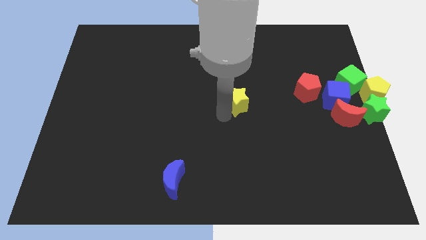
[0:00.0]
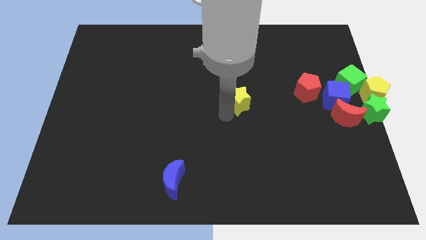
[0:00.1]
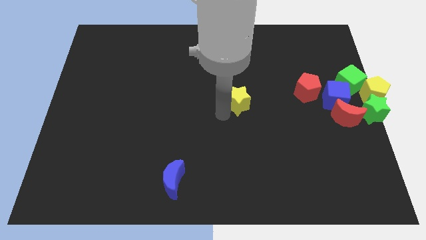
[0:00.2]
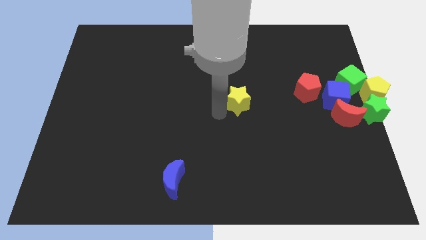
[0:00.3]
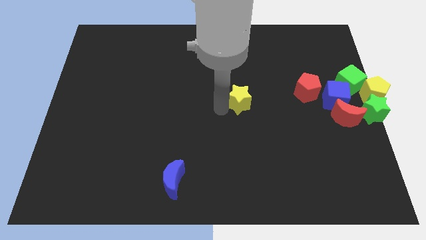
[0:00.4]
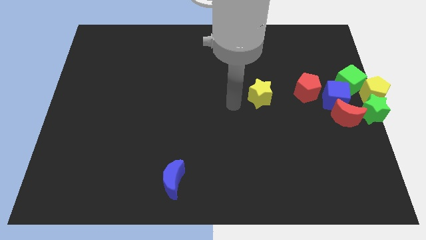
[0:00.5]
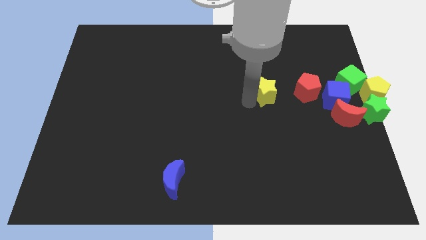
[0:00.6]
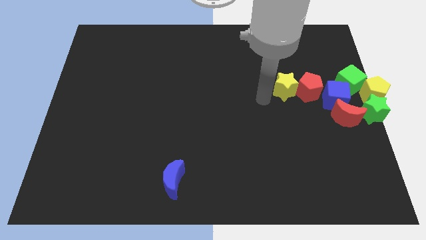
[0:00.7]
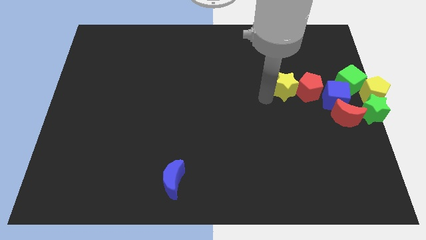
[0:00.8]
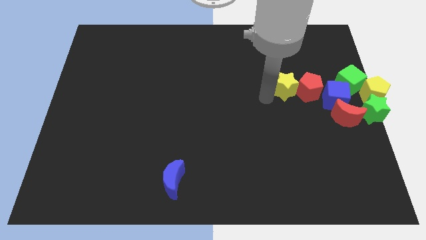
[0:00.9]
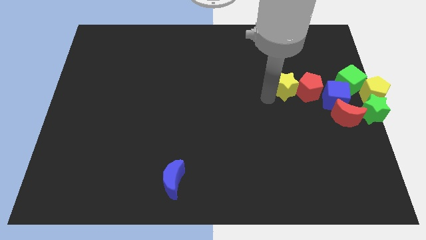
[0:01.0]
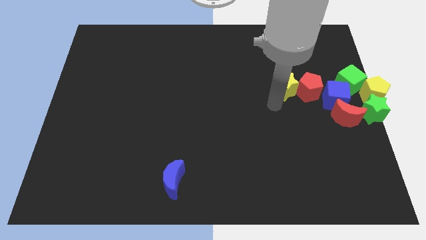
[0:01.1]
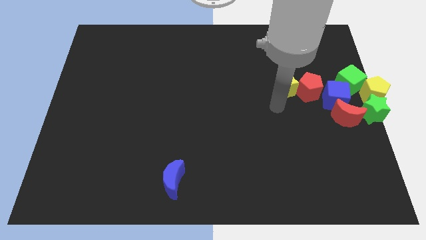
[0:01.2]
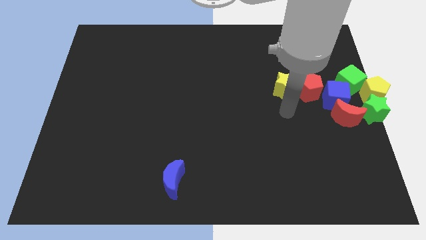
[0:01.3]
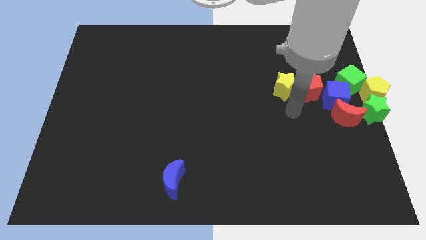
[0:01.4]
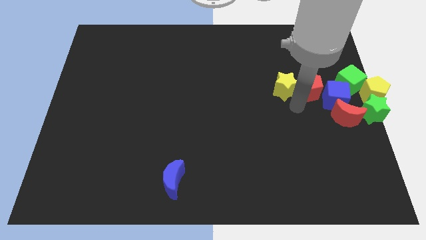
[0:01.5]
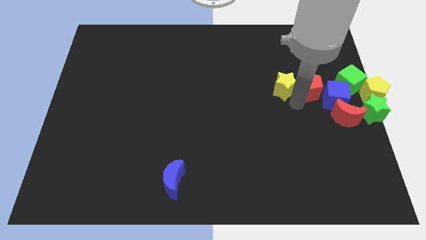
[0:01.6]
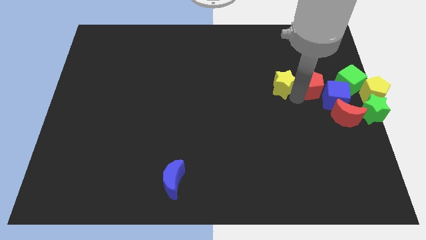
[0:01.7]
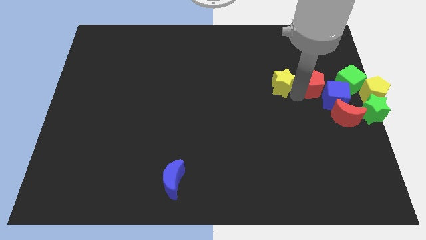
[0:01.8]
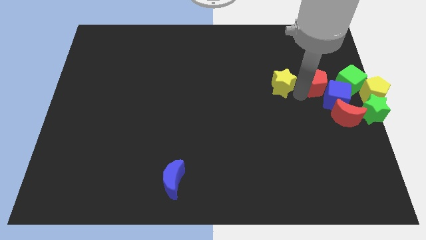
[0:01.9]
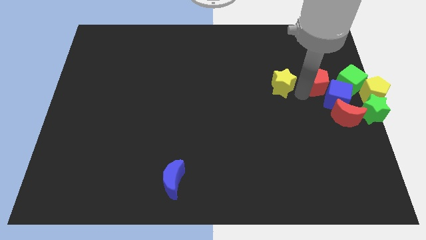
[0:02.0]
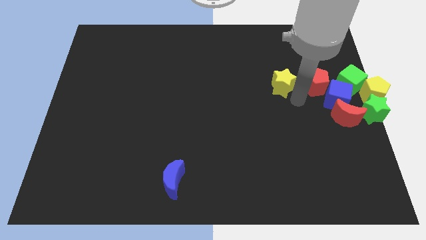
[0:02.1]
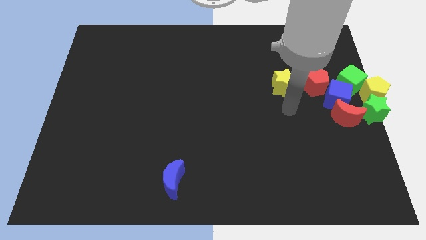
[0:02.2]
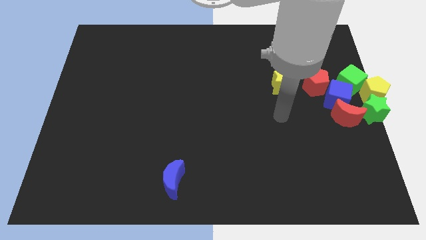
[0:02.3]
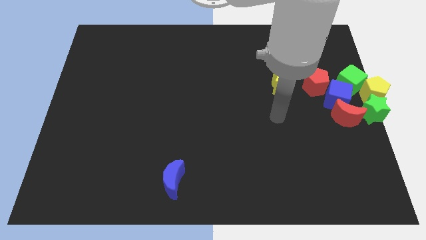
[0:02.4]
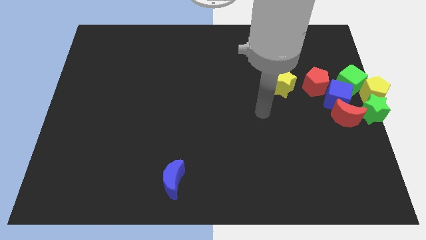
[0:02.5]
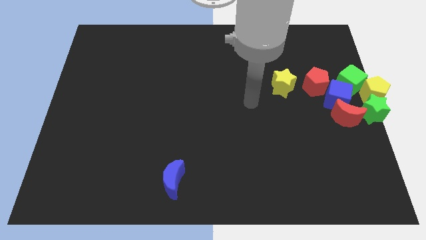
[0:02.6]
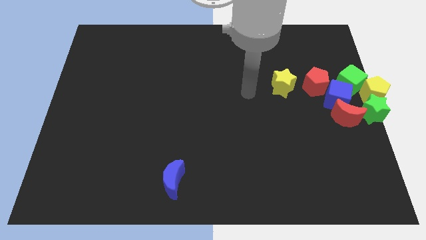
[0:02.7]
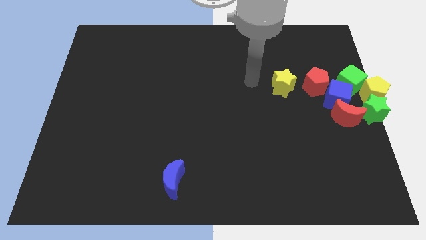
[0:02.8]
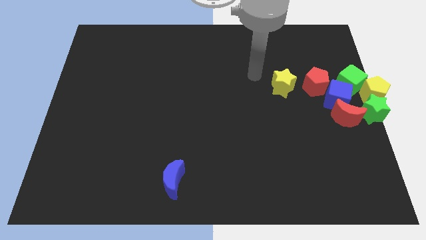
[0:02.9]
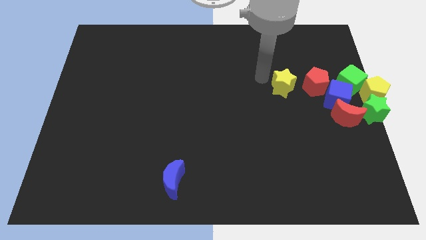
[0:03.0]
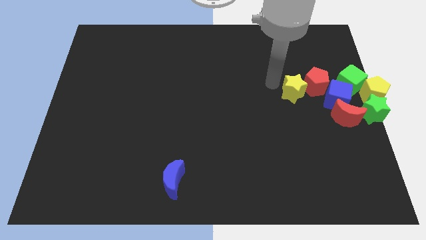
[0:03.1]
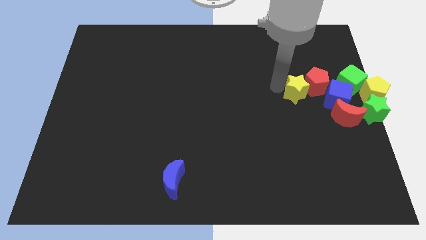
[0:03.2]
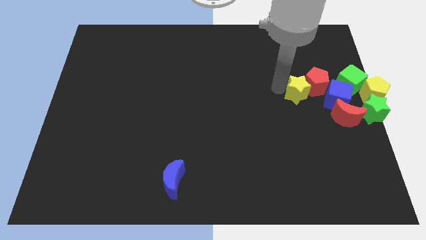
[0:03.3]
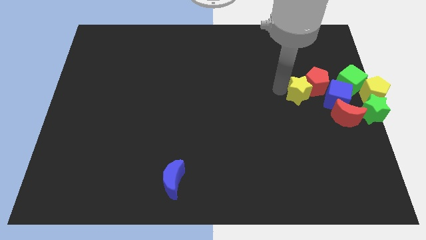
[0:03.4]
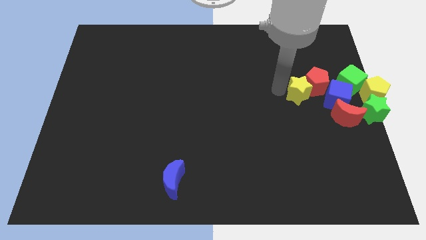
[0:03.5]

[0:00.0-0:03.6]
push the yellow star into the red pentagon

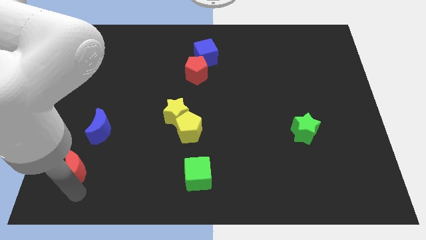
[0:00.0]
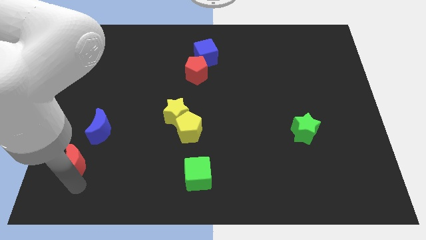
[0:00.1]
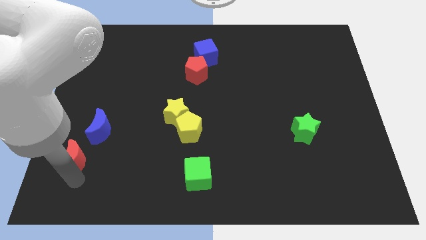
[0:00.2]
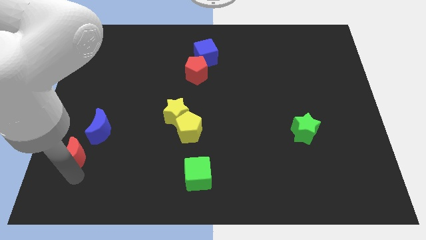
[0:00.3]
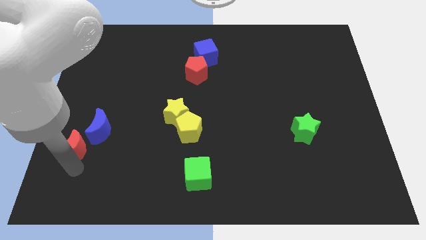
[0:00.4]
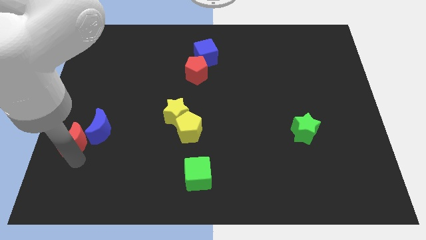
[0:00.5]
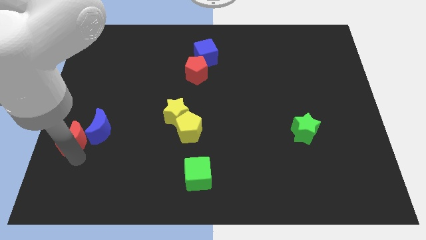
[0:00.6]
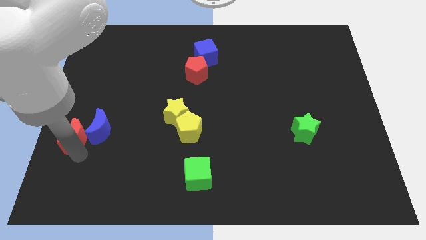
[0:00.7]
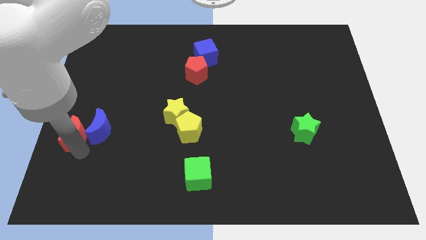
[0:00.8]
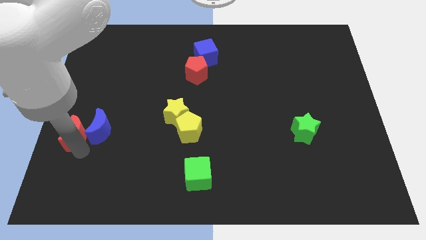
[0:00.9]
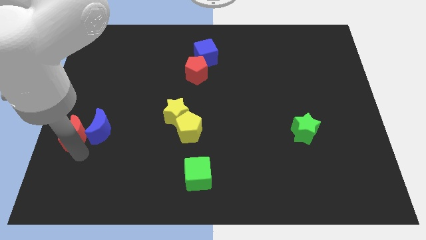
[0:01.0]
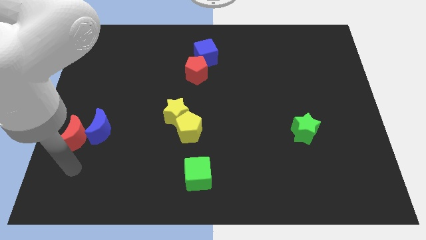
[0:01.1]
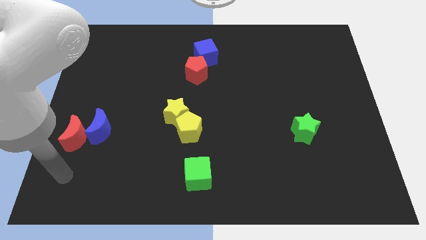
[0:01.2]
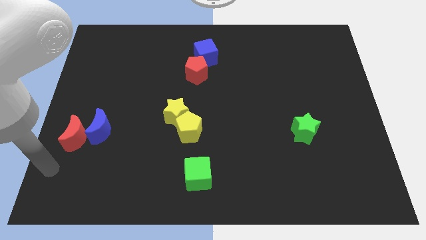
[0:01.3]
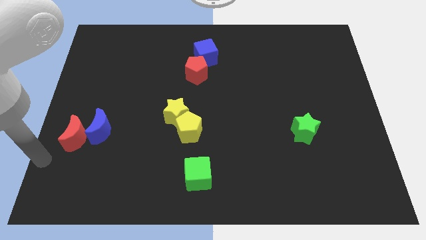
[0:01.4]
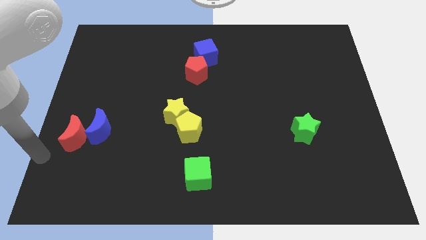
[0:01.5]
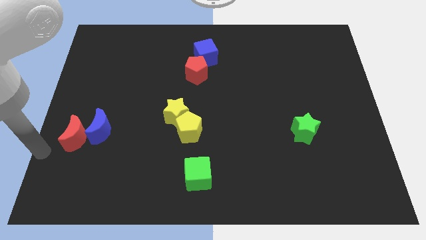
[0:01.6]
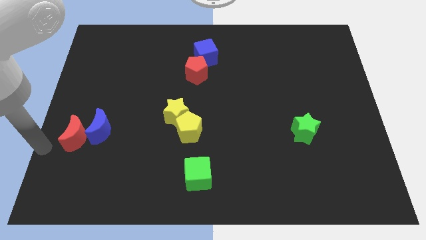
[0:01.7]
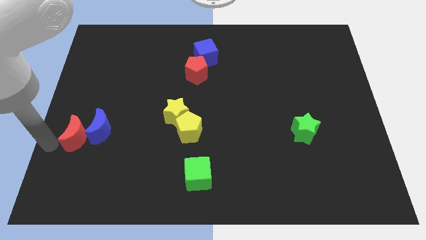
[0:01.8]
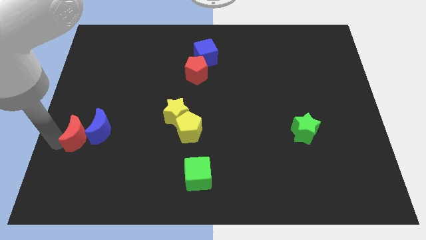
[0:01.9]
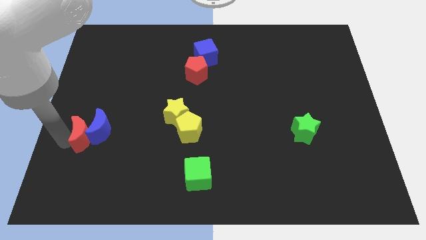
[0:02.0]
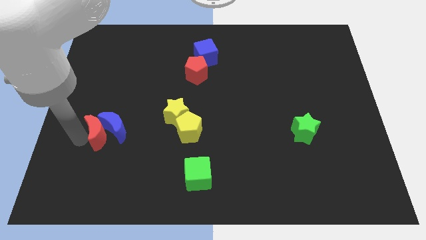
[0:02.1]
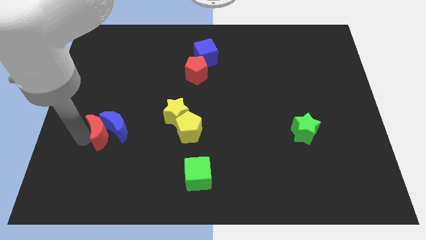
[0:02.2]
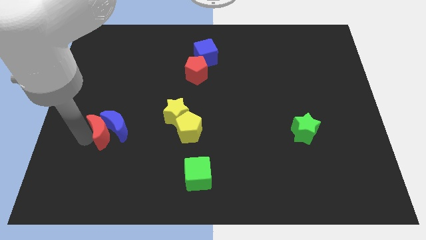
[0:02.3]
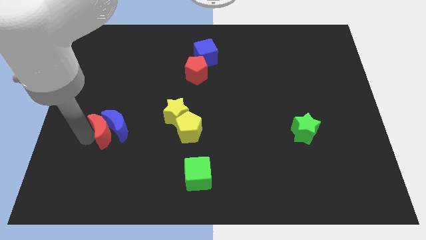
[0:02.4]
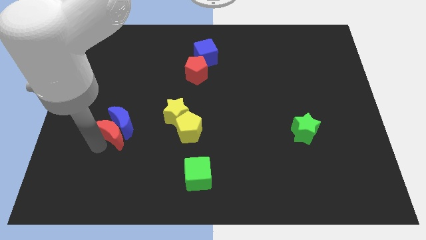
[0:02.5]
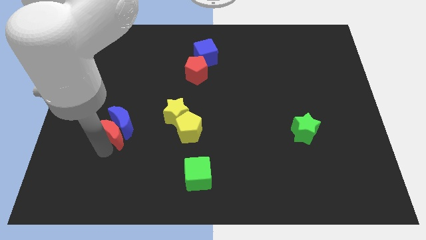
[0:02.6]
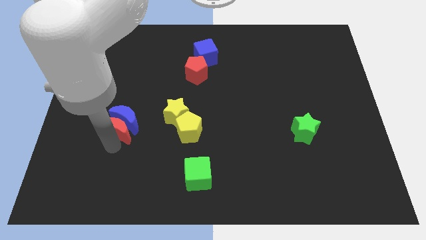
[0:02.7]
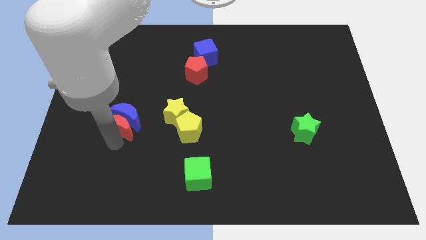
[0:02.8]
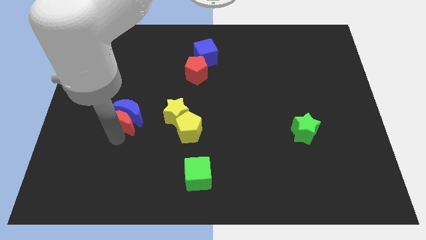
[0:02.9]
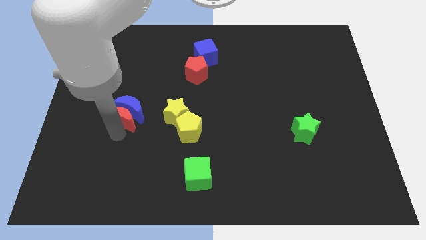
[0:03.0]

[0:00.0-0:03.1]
move blue moon and red moon towards the red pentagon and blue cube

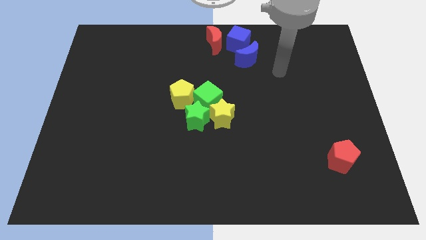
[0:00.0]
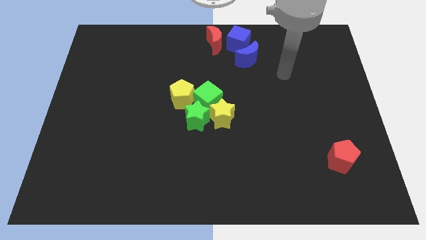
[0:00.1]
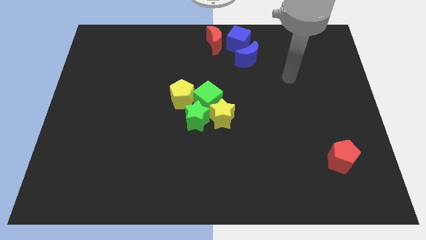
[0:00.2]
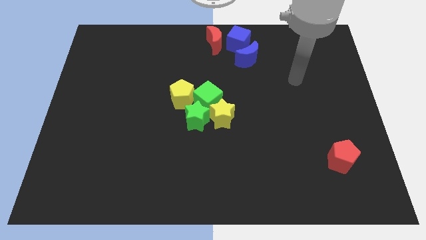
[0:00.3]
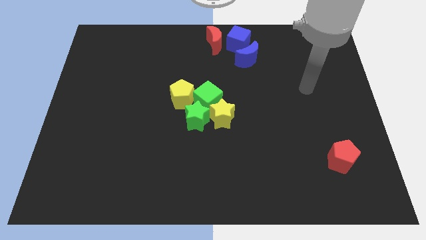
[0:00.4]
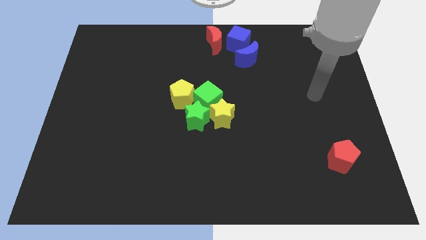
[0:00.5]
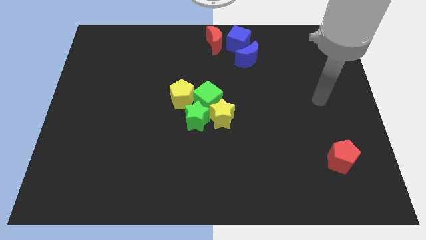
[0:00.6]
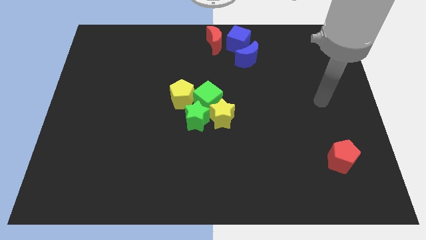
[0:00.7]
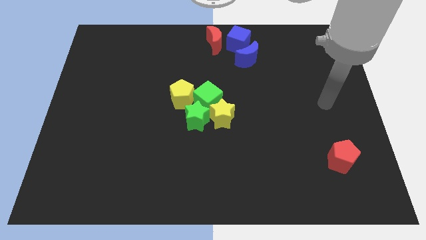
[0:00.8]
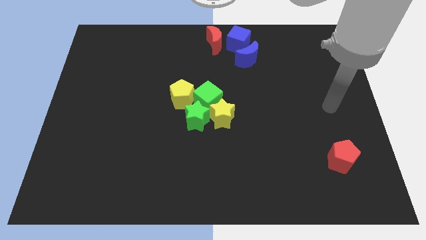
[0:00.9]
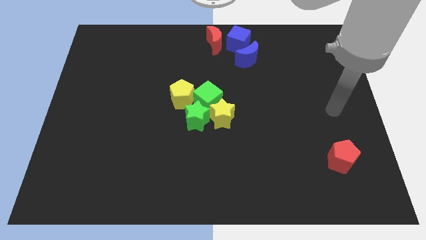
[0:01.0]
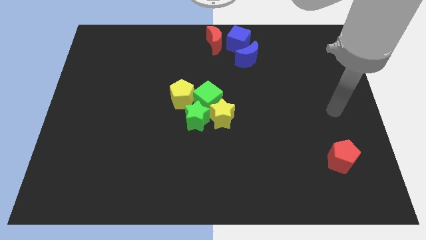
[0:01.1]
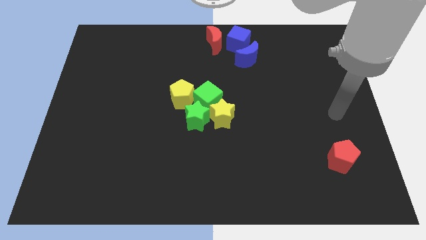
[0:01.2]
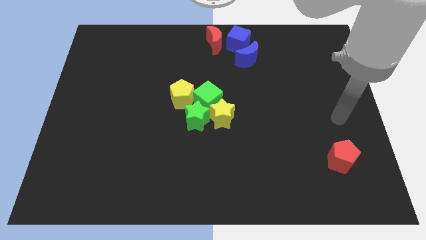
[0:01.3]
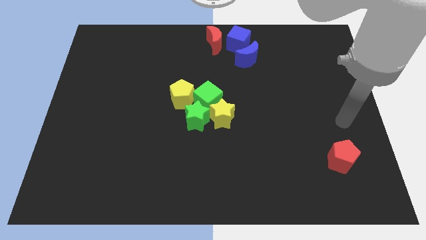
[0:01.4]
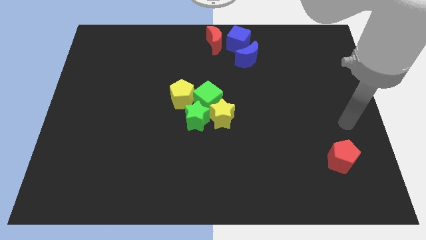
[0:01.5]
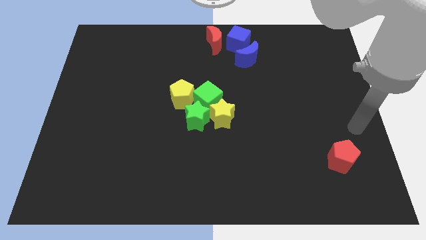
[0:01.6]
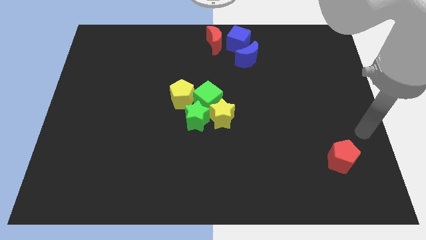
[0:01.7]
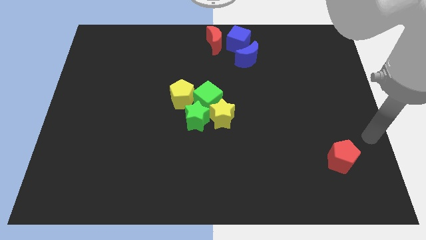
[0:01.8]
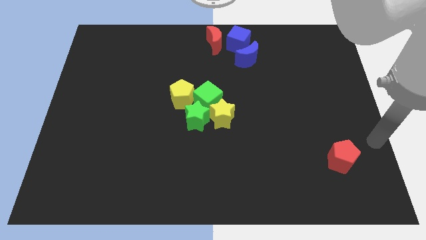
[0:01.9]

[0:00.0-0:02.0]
move your arm to the top right of red pentagon

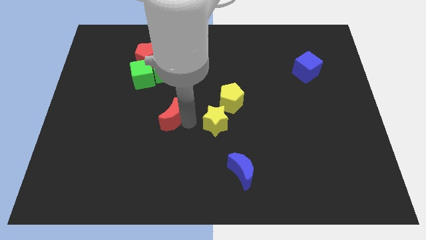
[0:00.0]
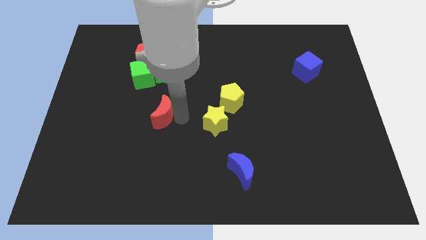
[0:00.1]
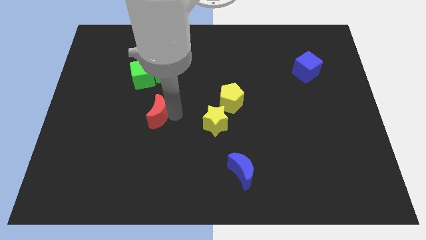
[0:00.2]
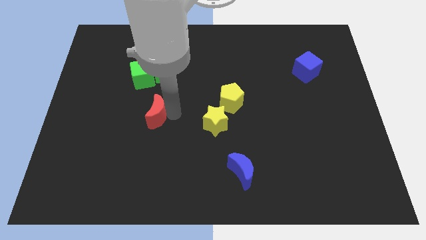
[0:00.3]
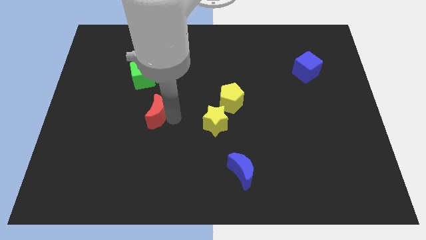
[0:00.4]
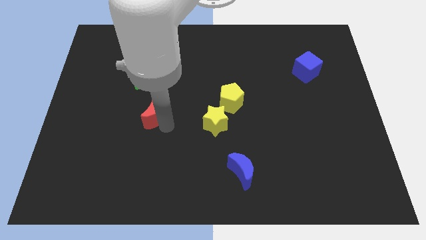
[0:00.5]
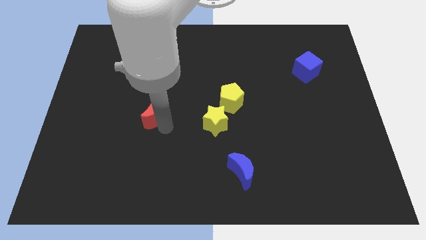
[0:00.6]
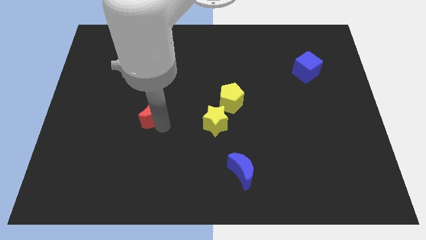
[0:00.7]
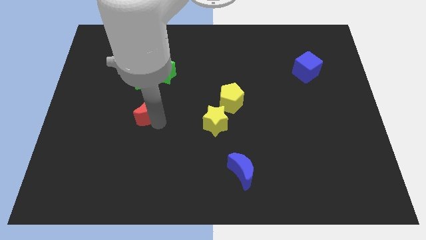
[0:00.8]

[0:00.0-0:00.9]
place the red moon below the green cube
